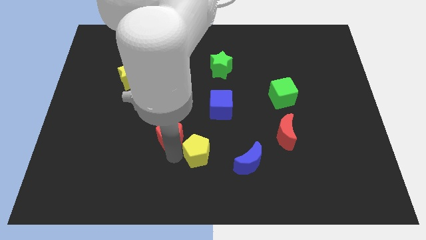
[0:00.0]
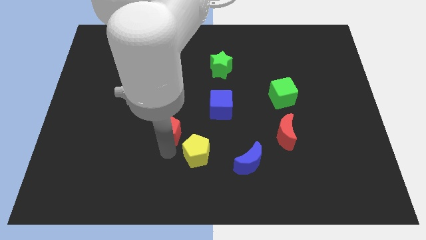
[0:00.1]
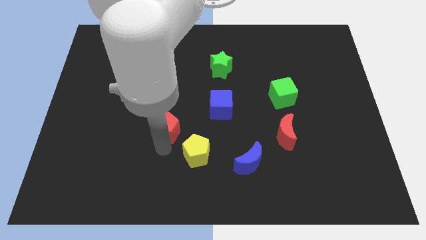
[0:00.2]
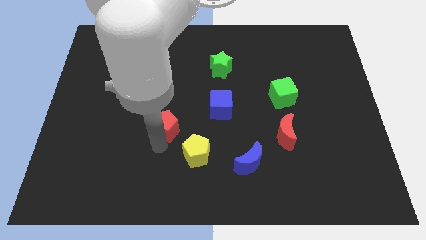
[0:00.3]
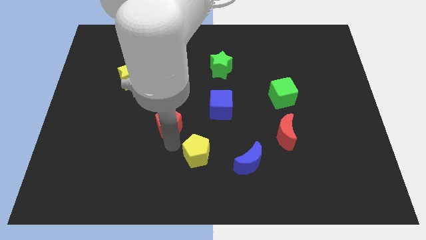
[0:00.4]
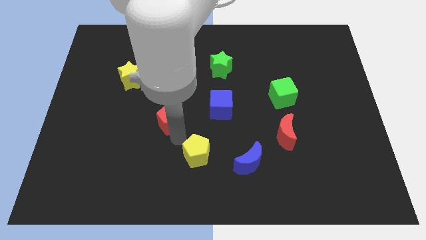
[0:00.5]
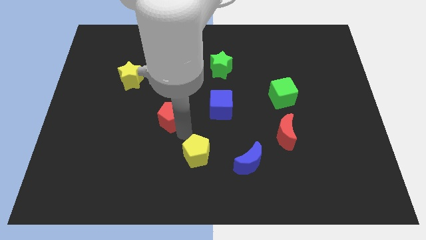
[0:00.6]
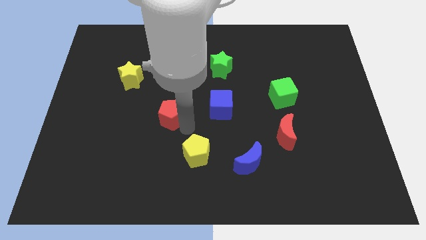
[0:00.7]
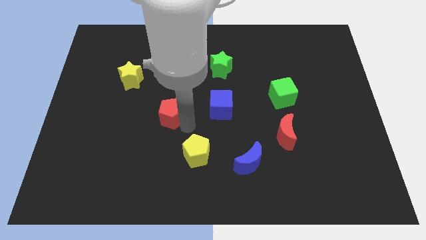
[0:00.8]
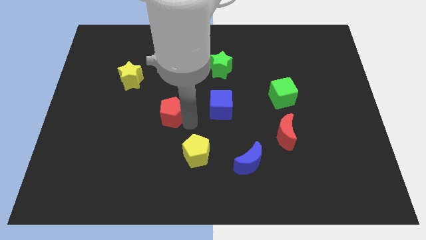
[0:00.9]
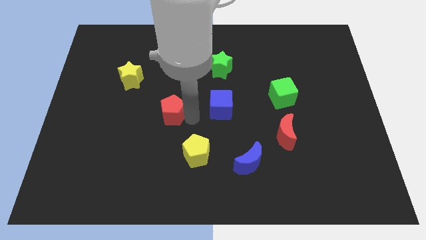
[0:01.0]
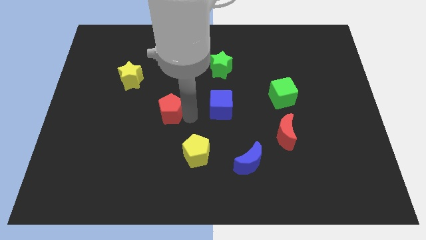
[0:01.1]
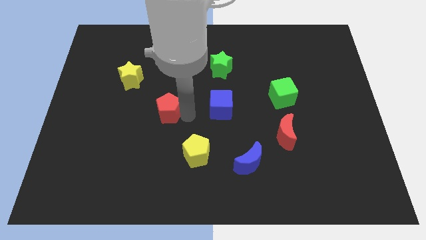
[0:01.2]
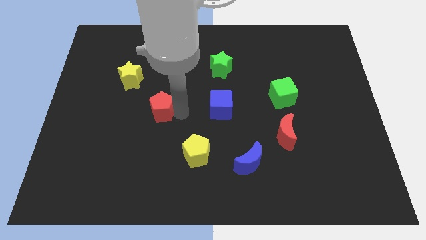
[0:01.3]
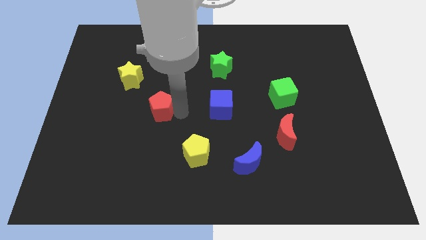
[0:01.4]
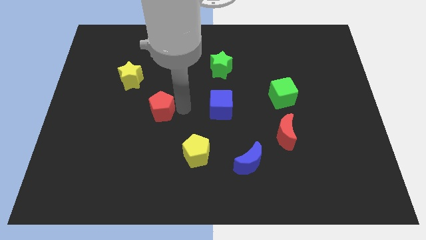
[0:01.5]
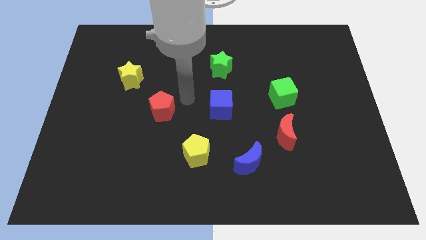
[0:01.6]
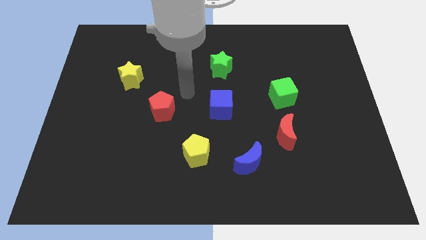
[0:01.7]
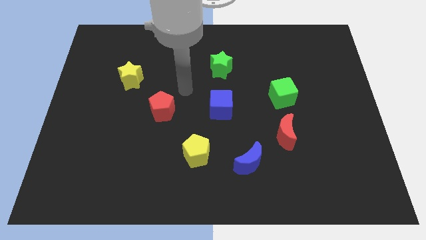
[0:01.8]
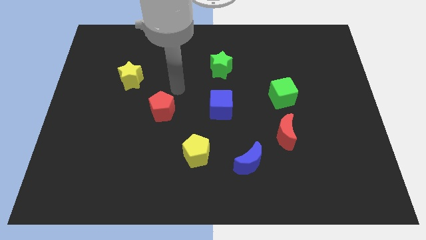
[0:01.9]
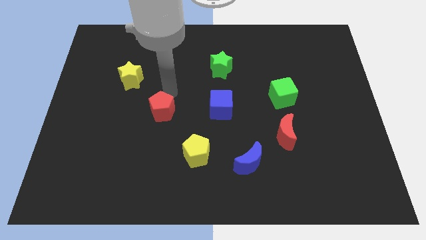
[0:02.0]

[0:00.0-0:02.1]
separate the red pentagon to the left of blue cube

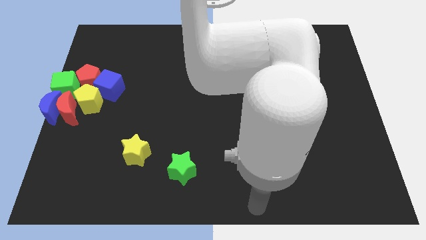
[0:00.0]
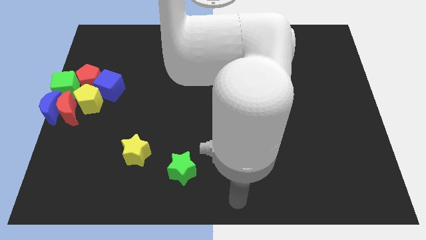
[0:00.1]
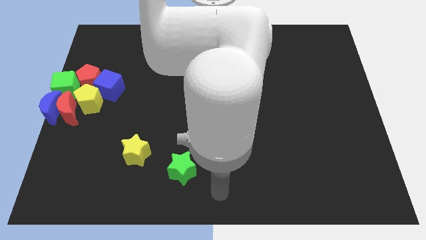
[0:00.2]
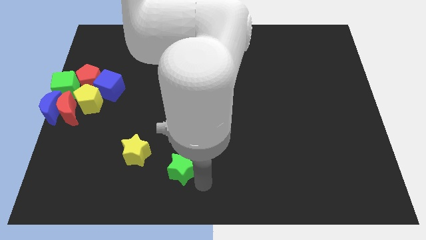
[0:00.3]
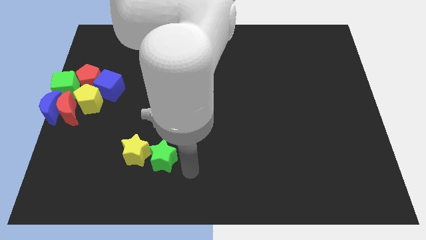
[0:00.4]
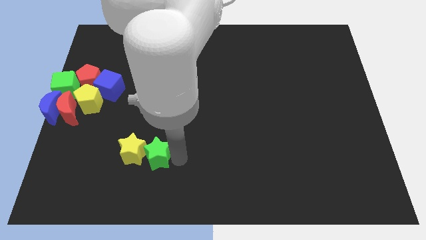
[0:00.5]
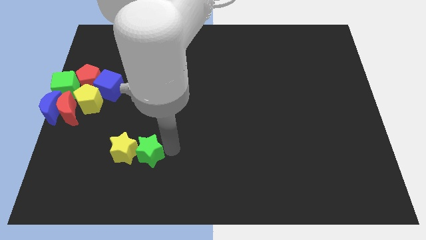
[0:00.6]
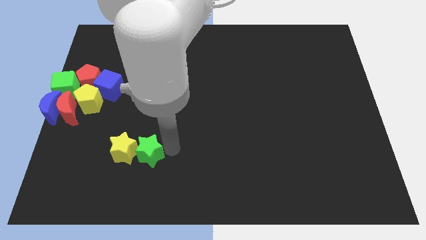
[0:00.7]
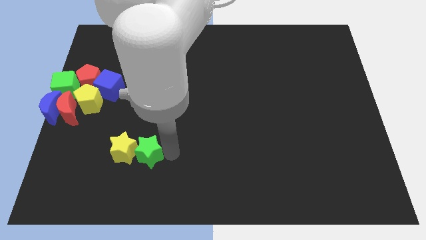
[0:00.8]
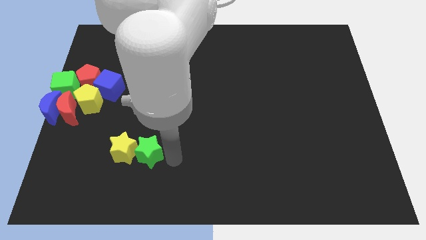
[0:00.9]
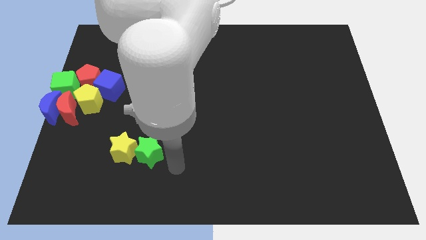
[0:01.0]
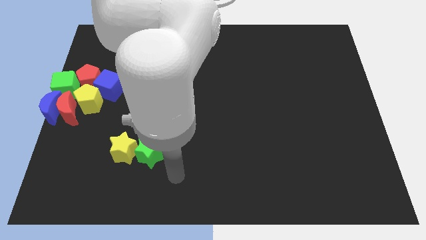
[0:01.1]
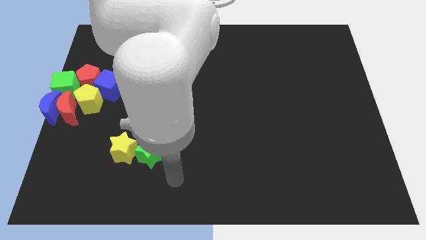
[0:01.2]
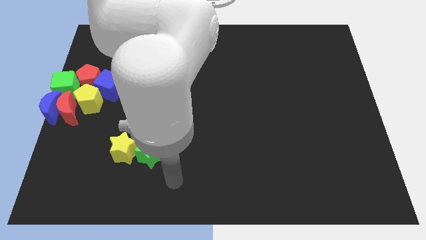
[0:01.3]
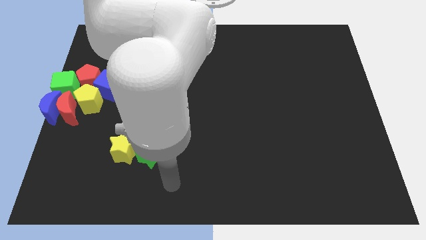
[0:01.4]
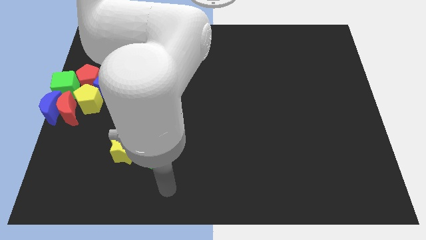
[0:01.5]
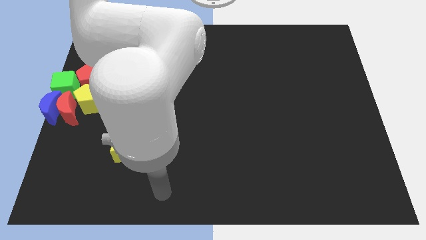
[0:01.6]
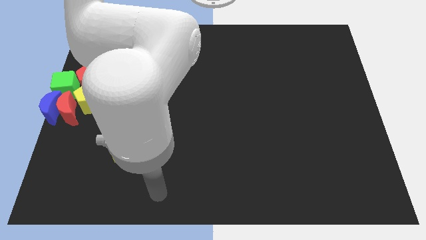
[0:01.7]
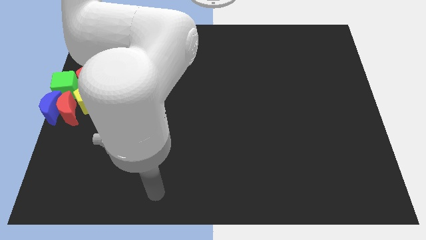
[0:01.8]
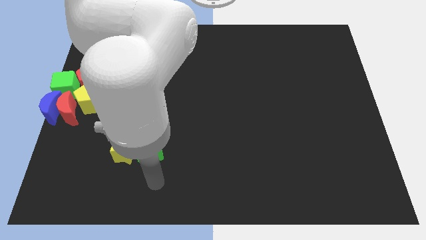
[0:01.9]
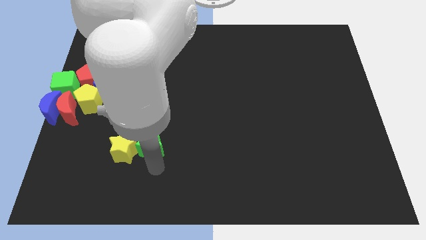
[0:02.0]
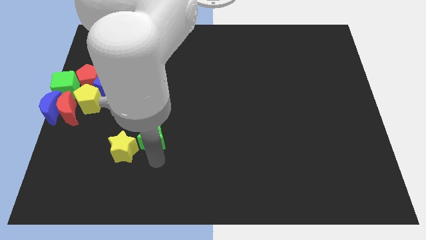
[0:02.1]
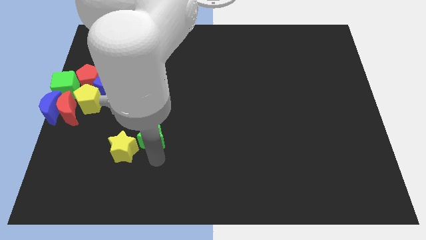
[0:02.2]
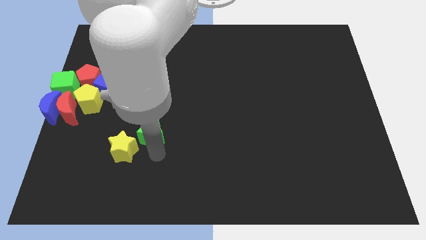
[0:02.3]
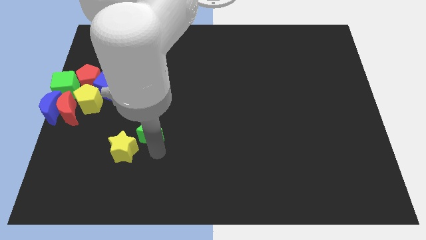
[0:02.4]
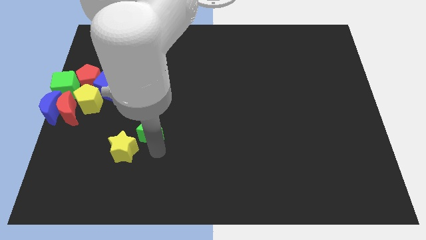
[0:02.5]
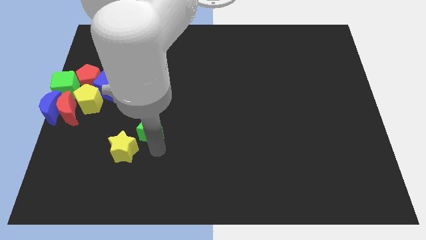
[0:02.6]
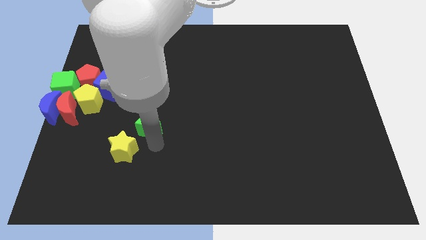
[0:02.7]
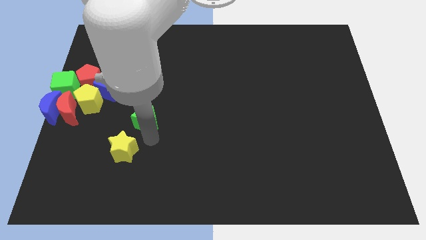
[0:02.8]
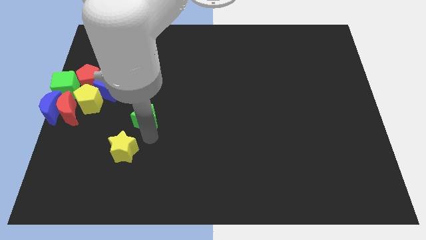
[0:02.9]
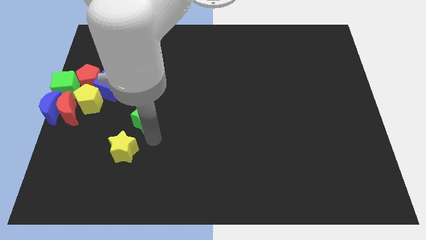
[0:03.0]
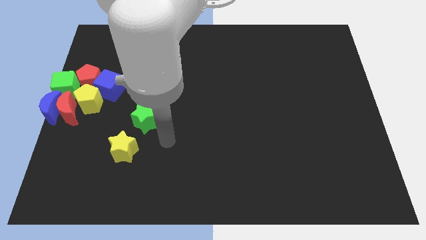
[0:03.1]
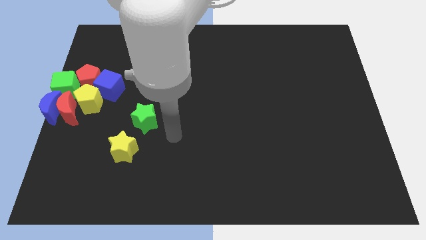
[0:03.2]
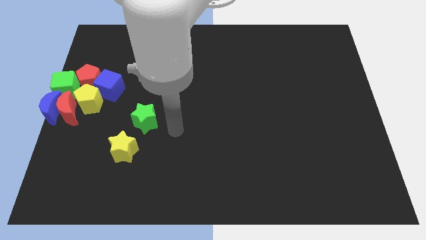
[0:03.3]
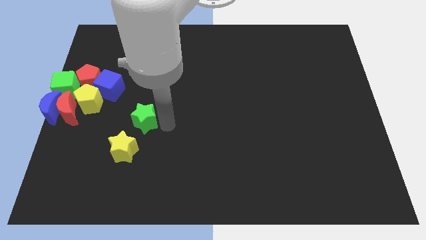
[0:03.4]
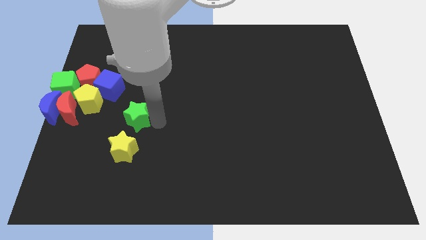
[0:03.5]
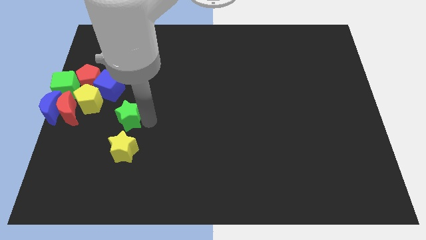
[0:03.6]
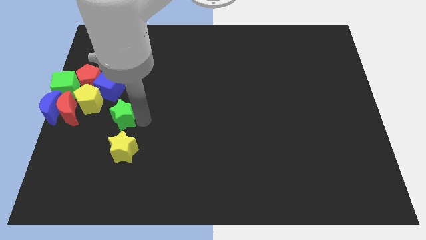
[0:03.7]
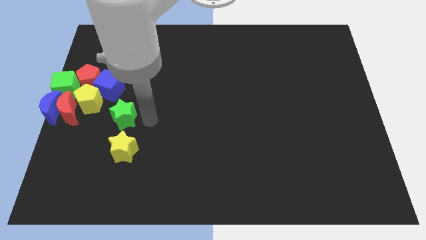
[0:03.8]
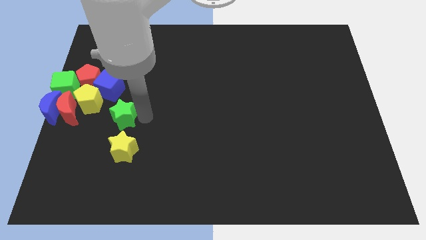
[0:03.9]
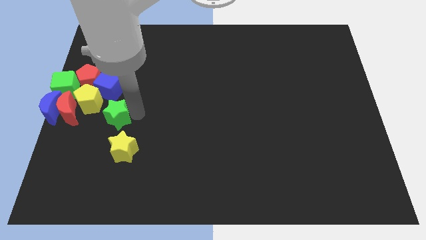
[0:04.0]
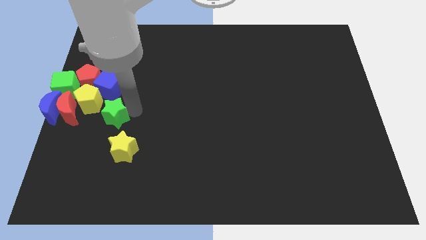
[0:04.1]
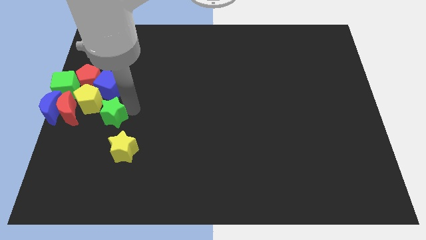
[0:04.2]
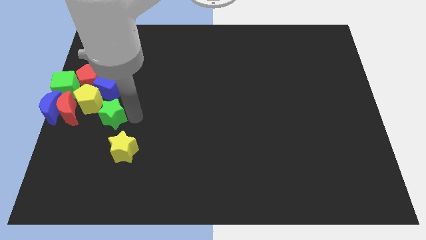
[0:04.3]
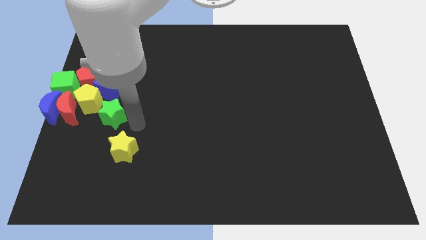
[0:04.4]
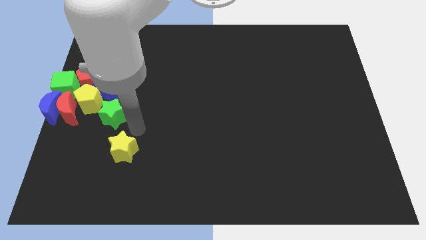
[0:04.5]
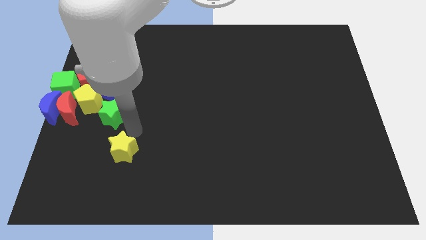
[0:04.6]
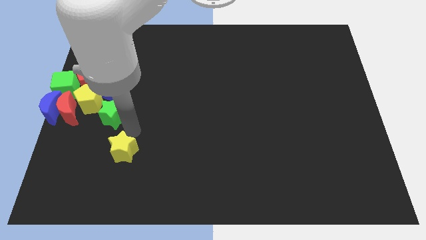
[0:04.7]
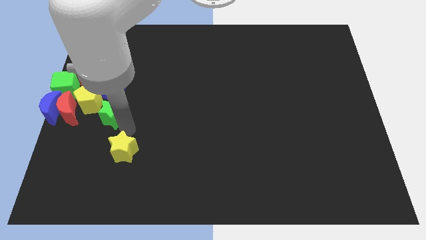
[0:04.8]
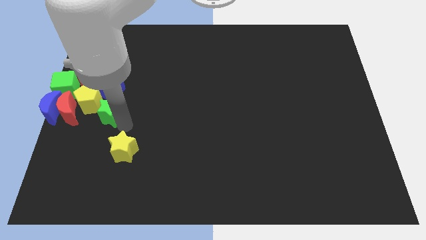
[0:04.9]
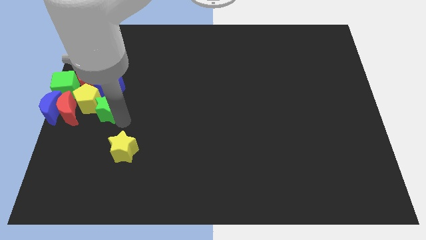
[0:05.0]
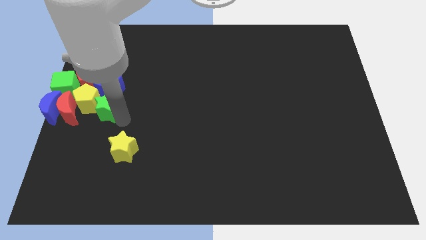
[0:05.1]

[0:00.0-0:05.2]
push the green star to the right of the yellow pentagon

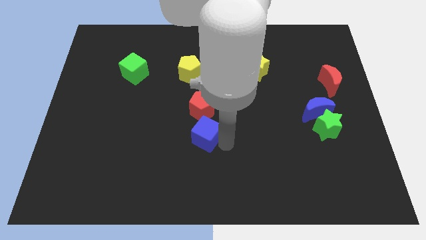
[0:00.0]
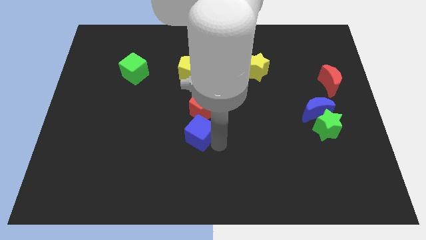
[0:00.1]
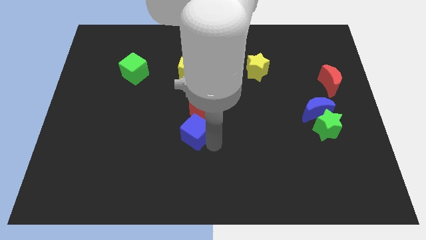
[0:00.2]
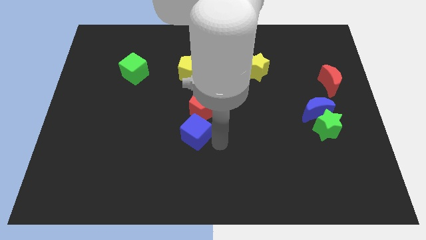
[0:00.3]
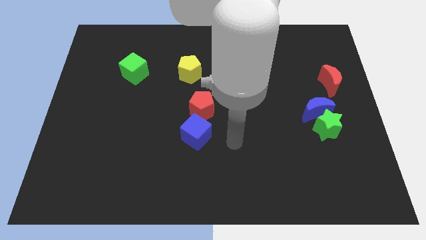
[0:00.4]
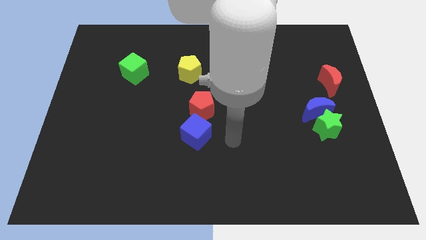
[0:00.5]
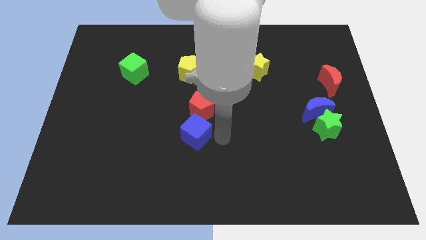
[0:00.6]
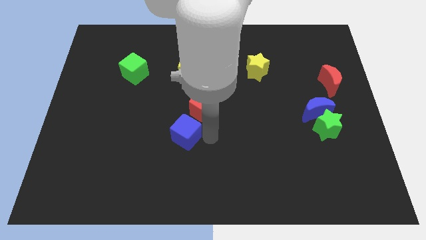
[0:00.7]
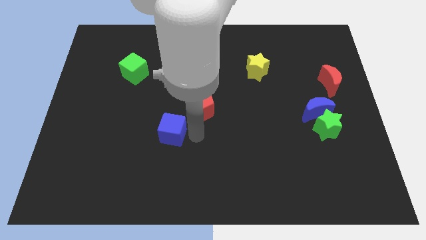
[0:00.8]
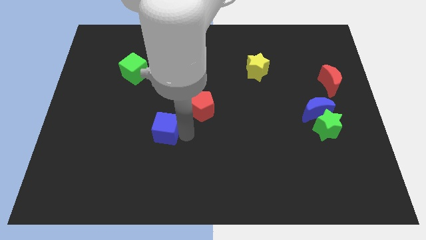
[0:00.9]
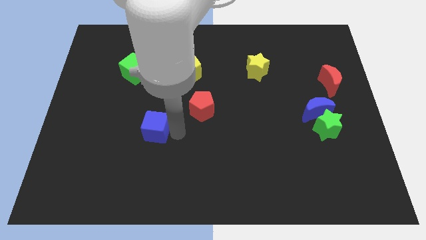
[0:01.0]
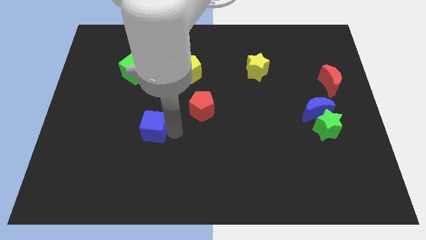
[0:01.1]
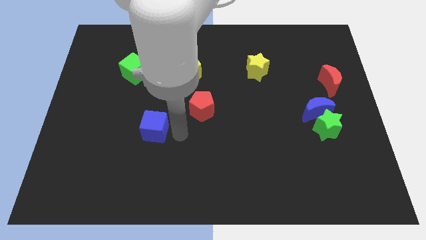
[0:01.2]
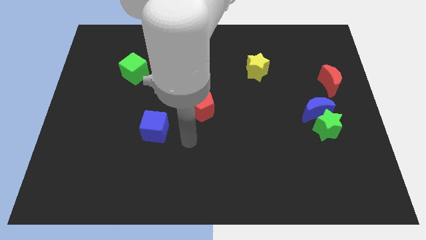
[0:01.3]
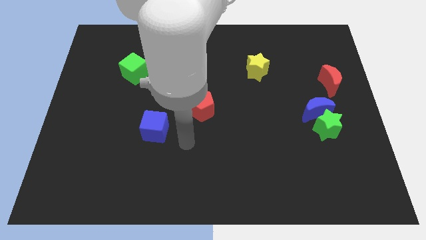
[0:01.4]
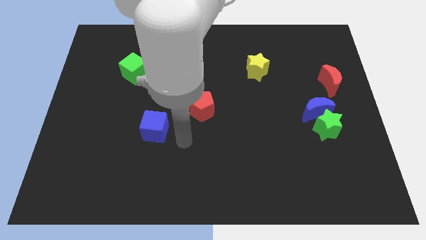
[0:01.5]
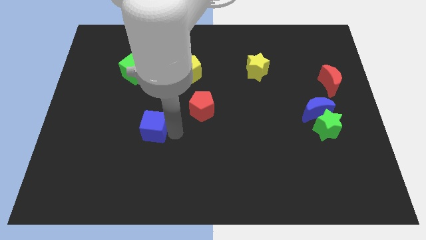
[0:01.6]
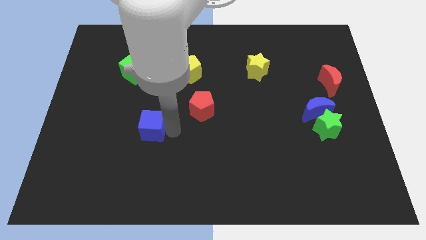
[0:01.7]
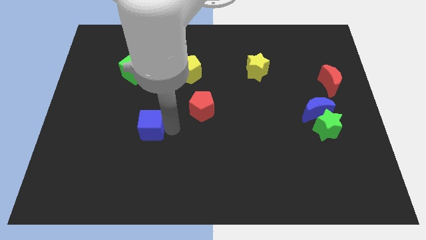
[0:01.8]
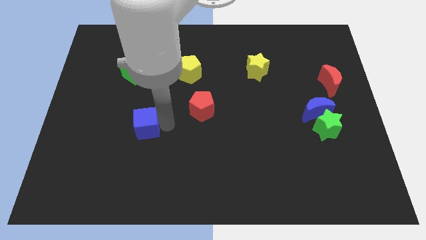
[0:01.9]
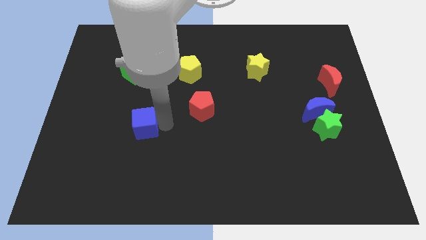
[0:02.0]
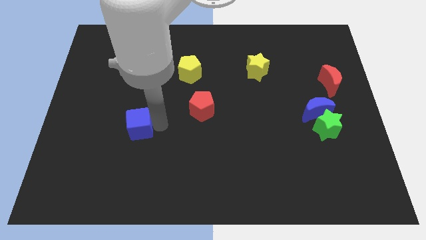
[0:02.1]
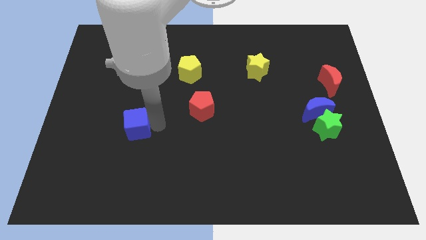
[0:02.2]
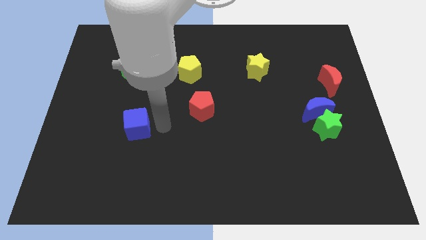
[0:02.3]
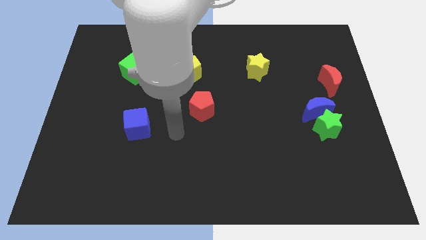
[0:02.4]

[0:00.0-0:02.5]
push the blue cube
